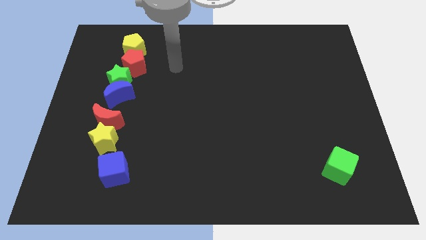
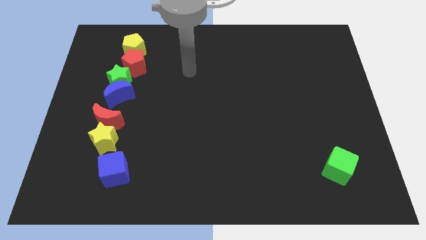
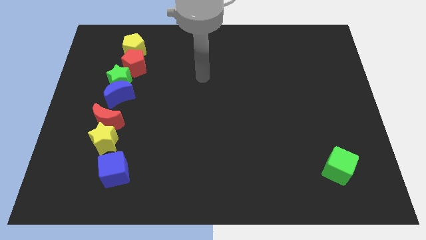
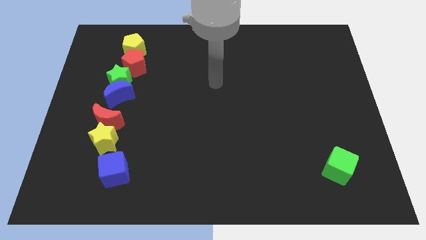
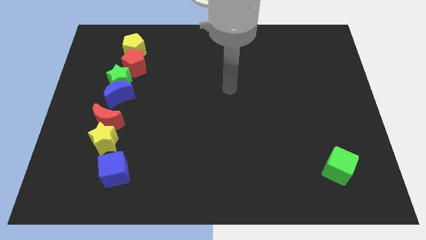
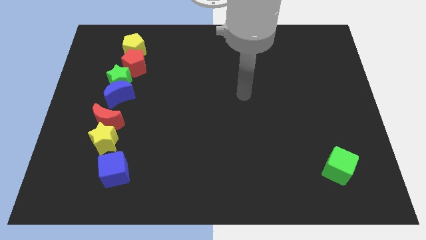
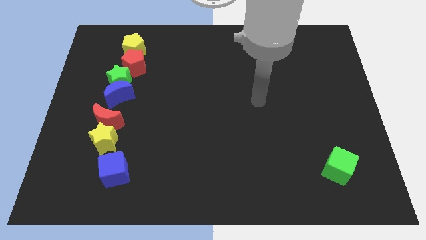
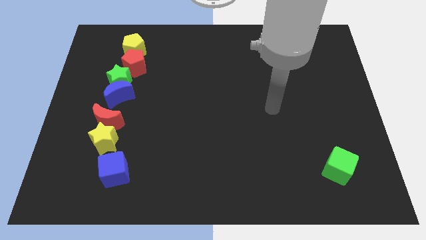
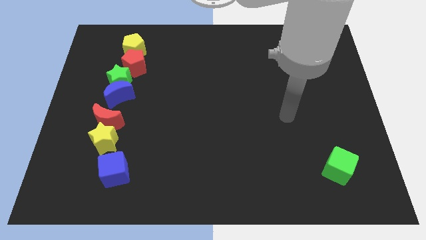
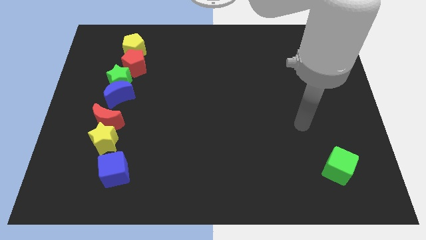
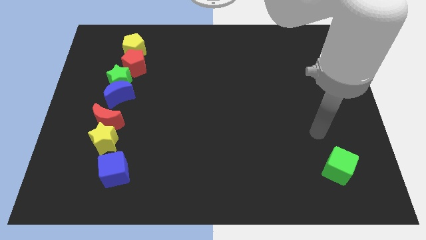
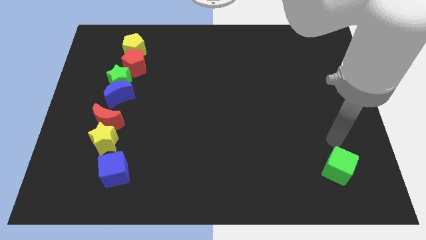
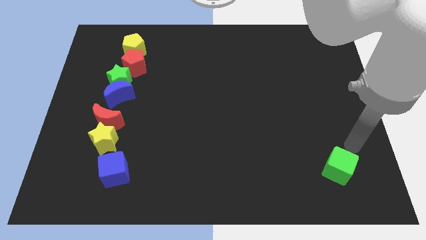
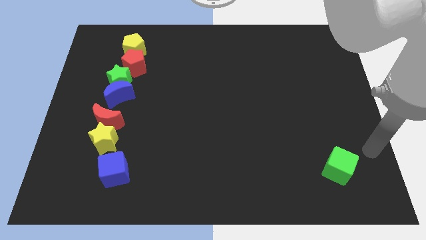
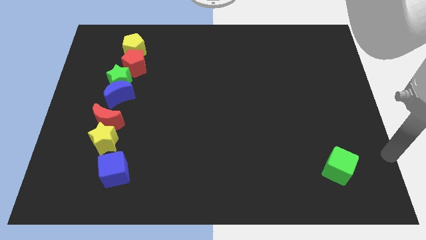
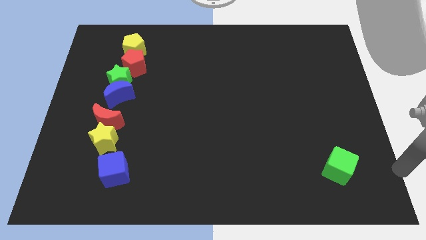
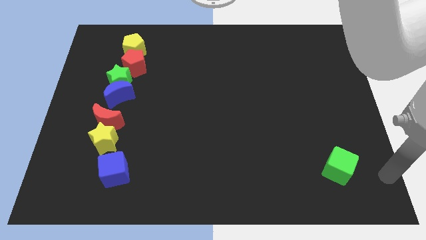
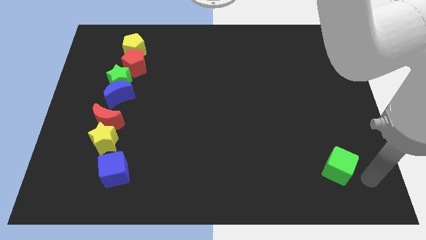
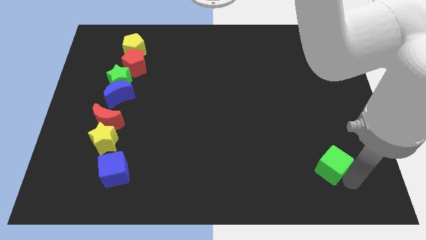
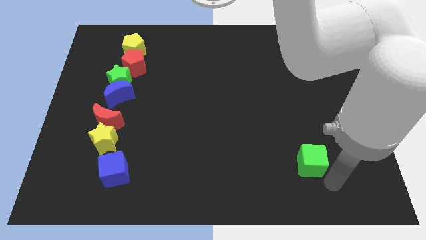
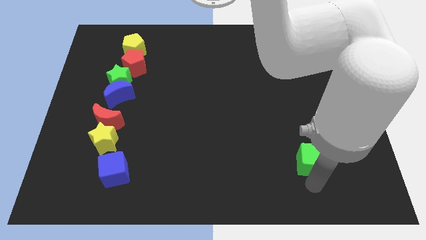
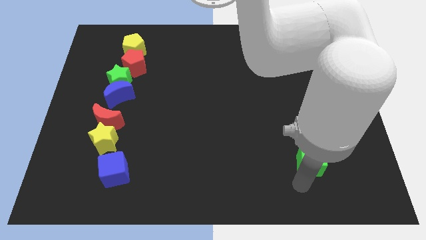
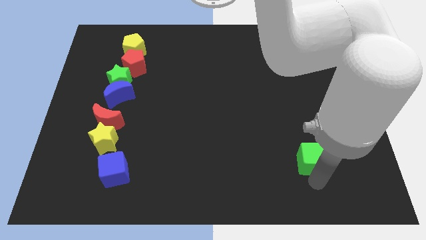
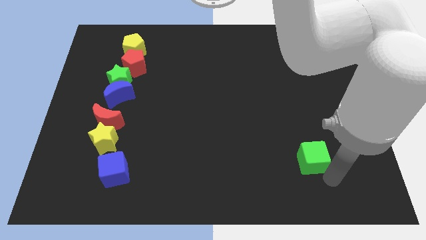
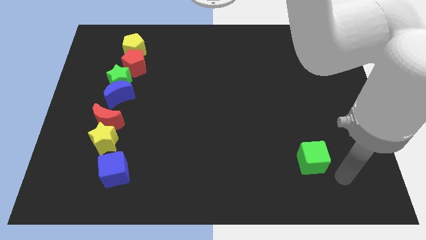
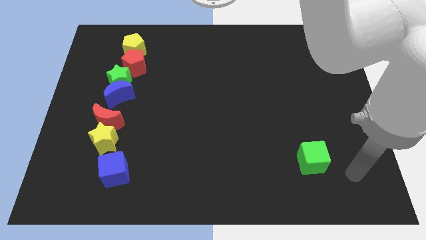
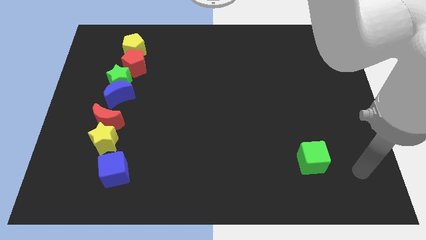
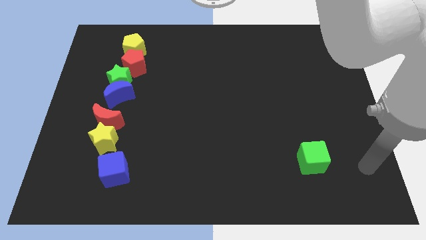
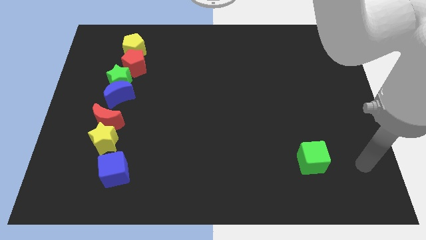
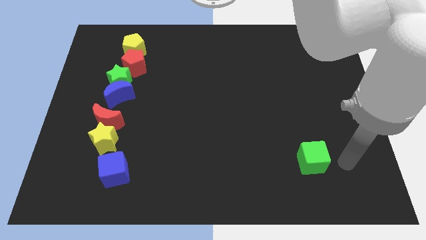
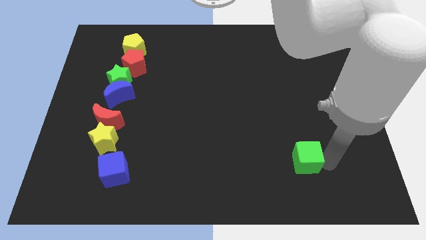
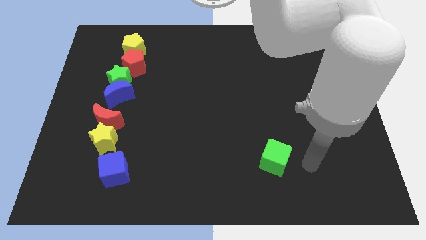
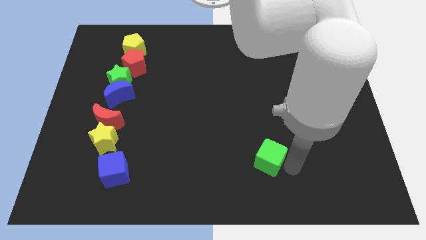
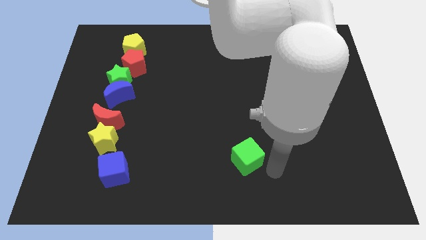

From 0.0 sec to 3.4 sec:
move the green cube slightly to the left

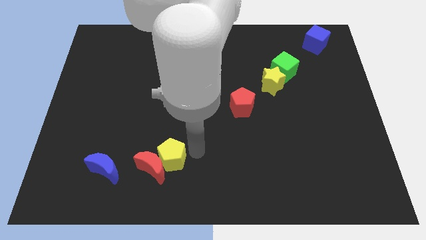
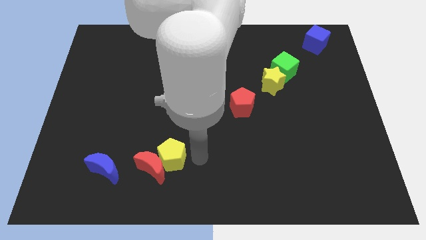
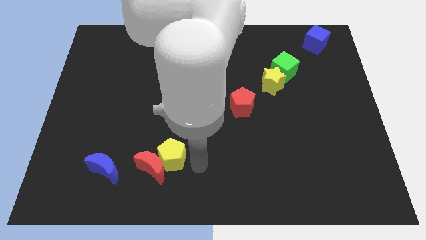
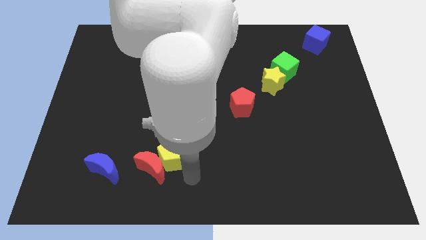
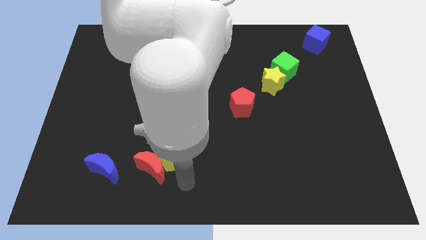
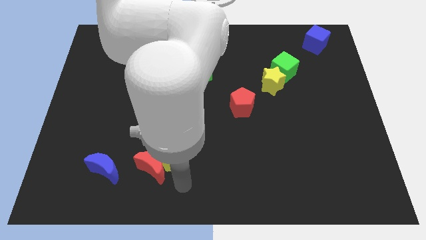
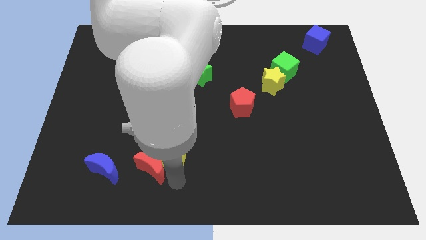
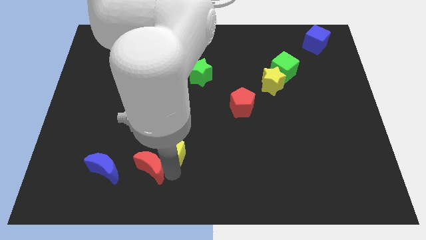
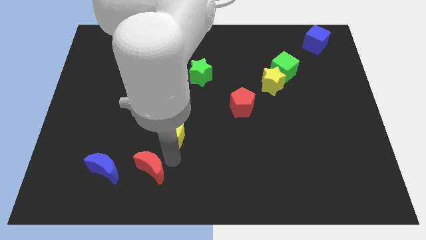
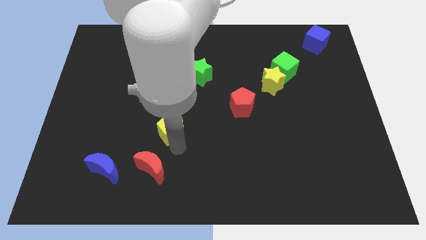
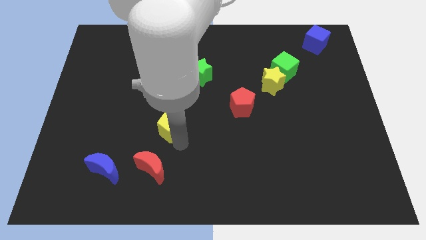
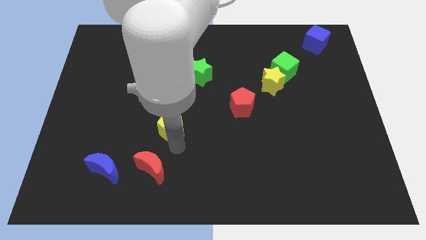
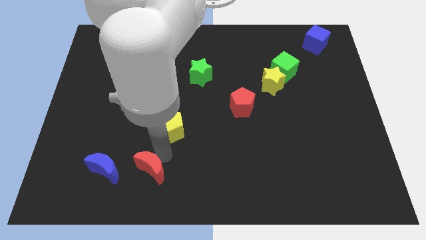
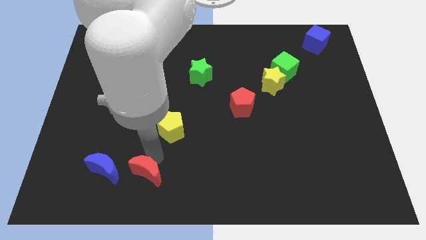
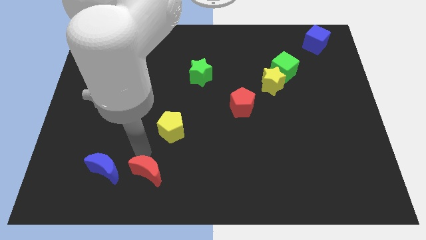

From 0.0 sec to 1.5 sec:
separate the red moon and yellow pentagon

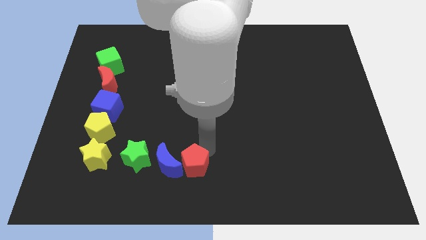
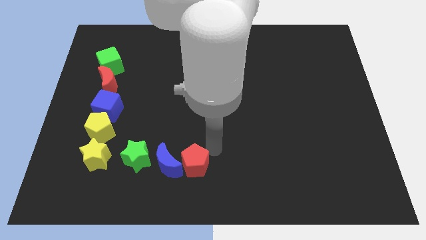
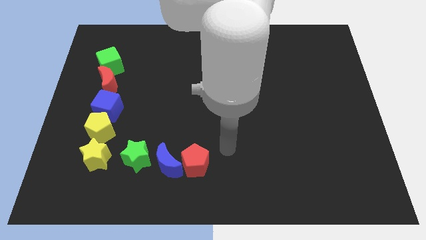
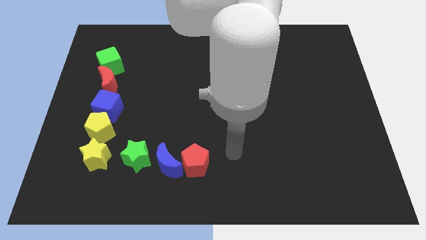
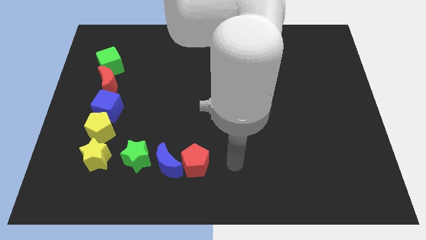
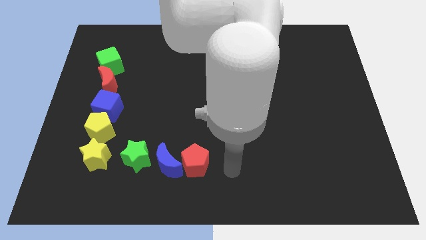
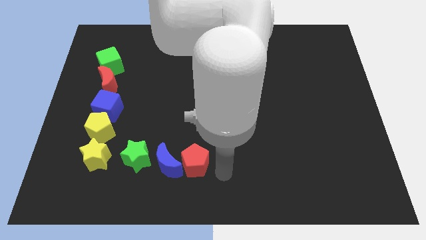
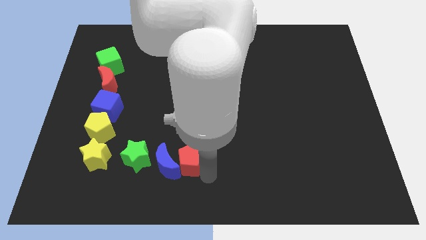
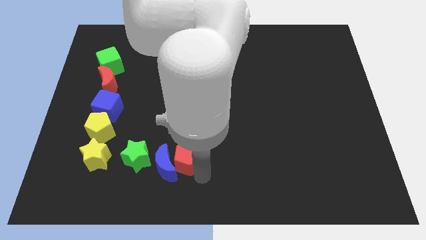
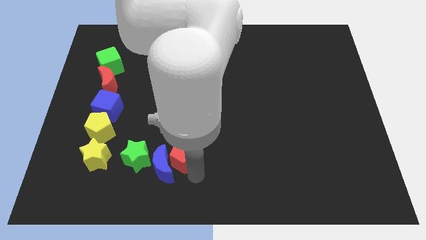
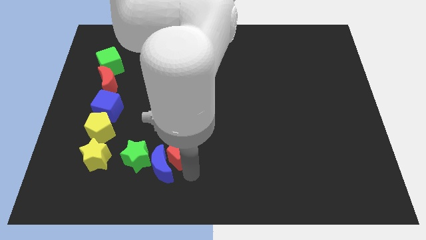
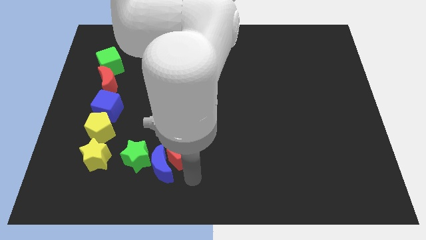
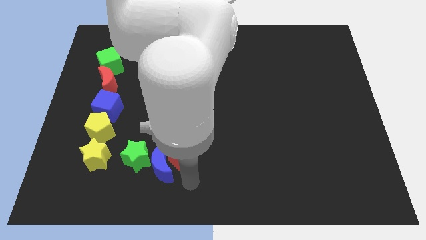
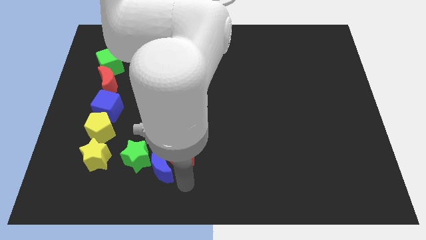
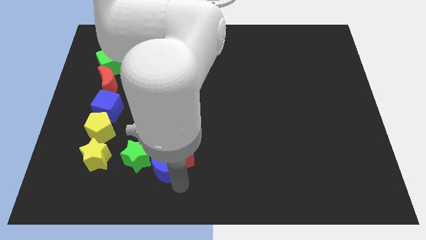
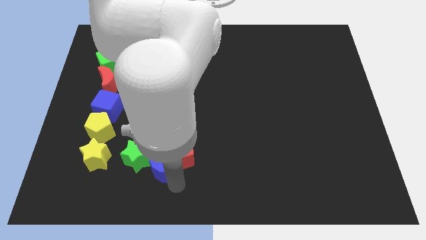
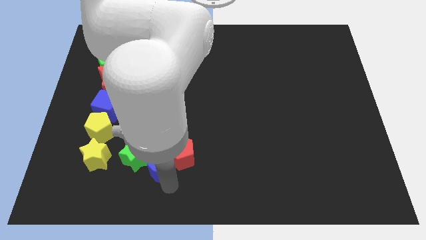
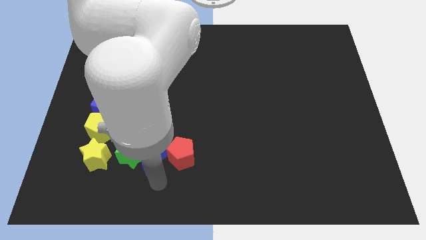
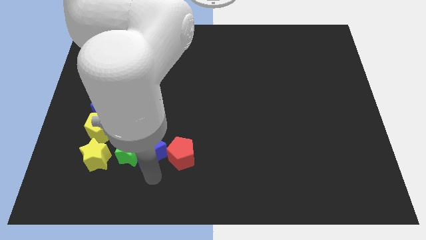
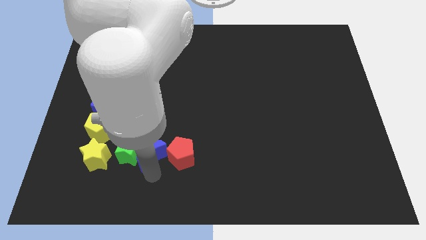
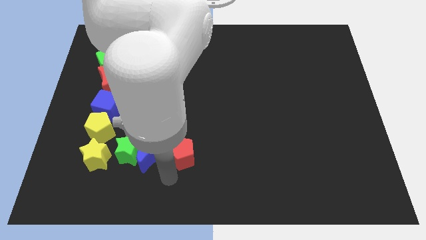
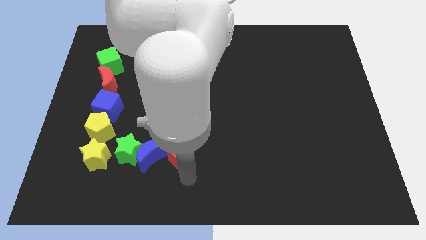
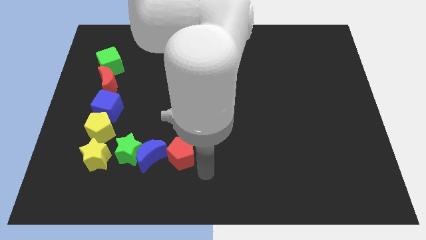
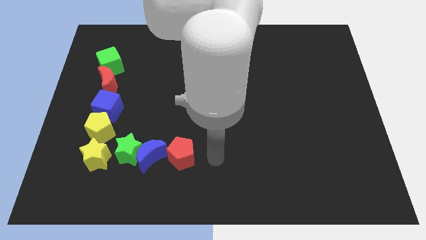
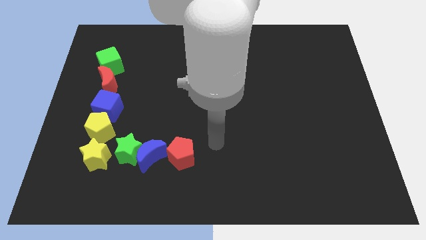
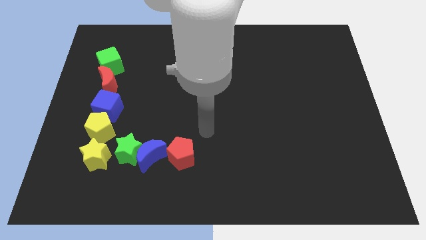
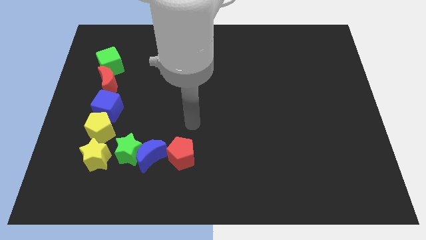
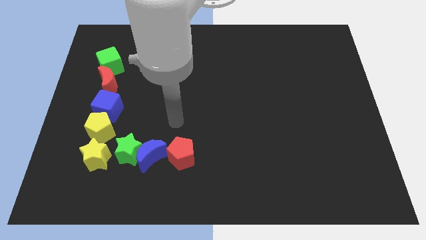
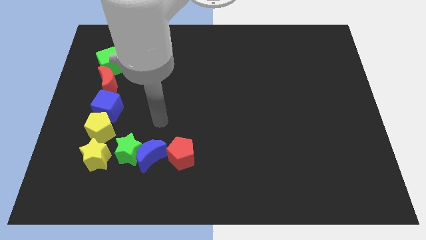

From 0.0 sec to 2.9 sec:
touch red pentagon blue moon with your arm

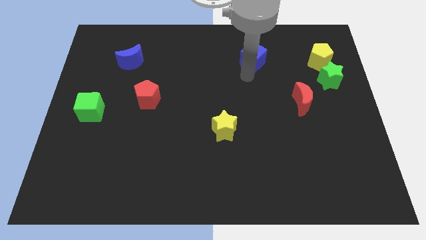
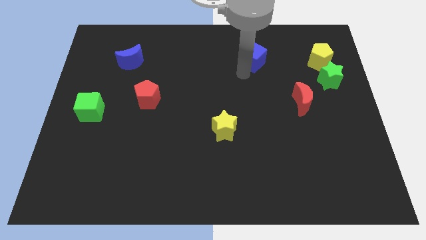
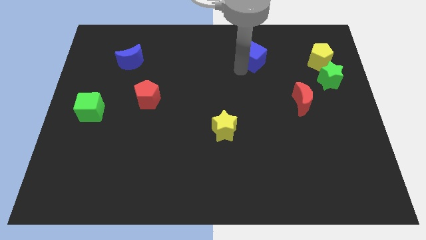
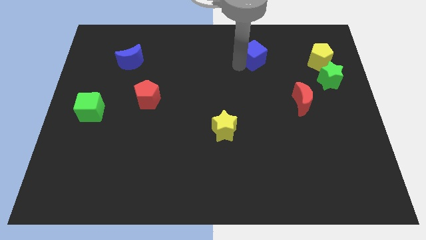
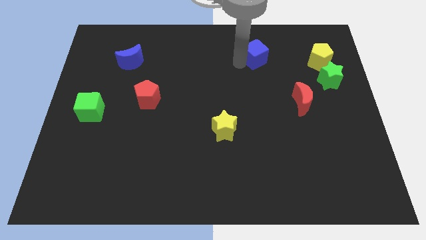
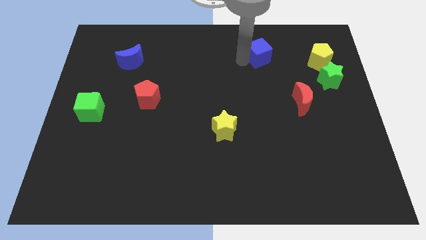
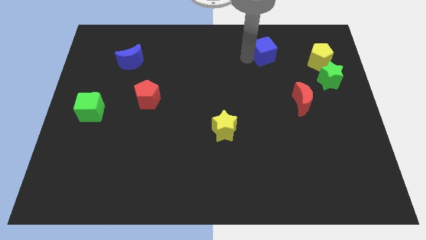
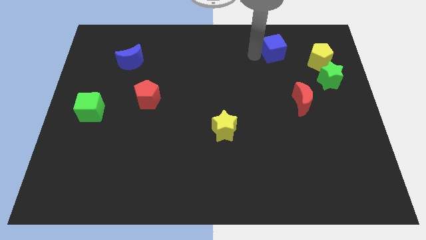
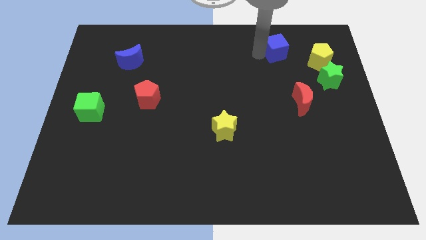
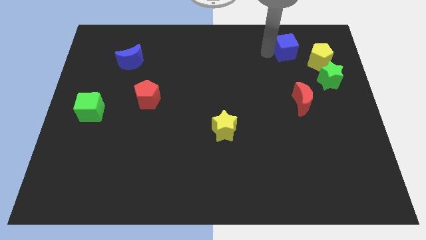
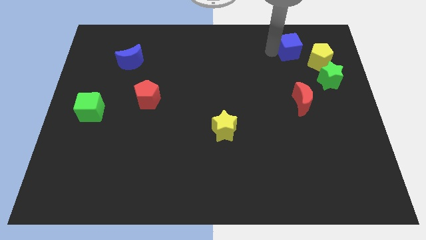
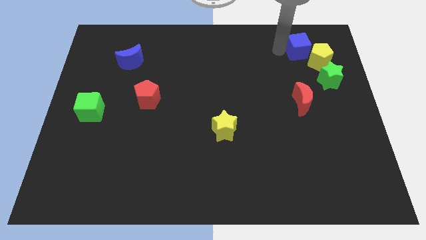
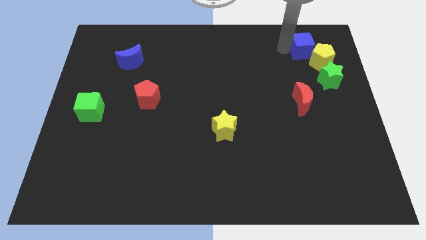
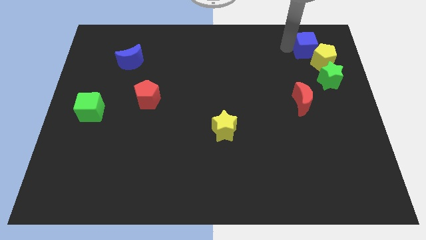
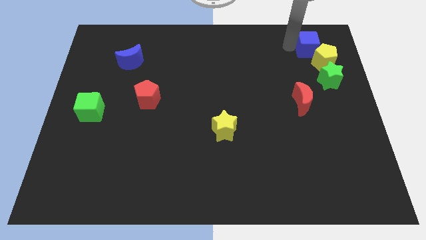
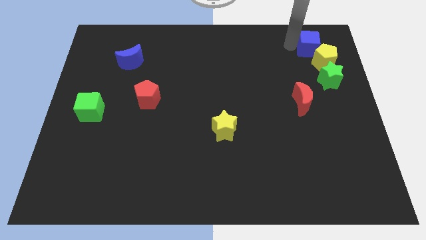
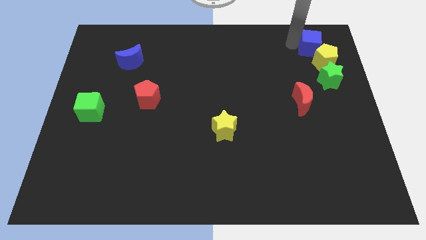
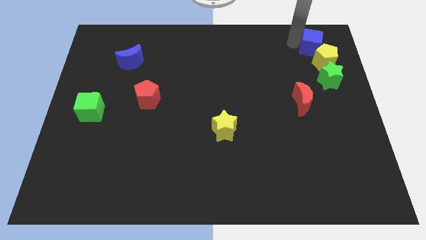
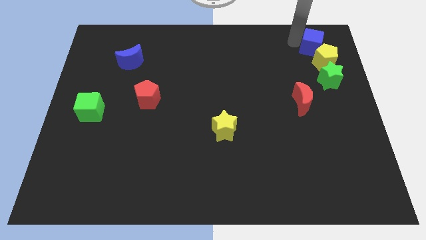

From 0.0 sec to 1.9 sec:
push the blue cube into the yellow pentagon
